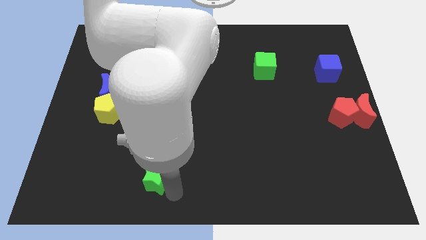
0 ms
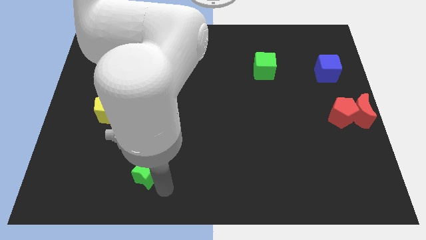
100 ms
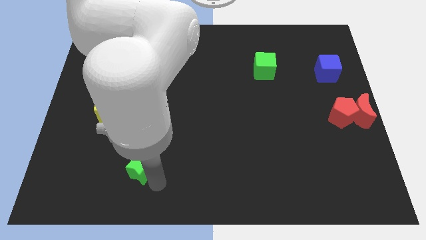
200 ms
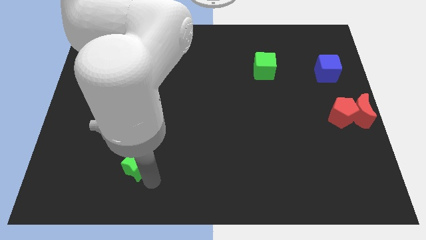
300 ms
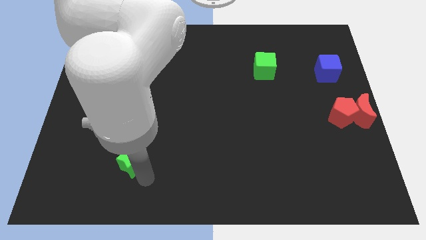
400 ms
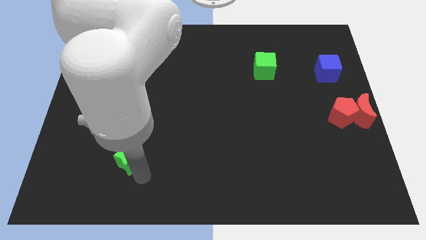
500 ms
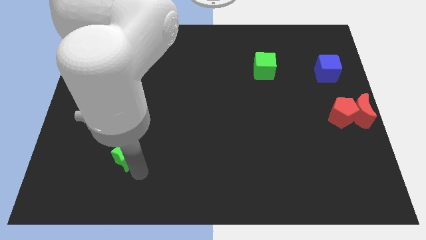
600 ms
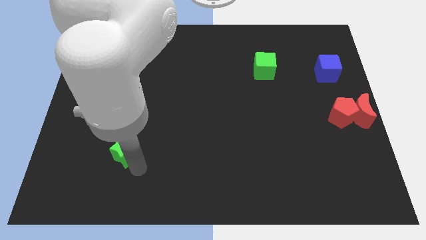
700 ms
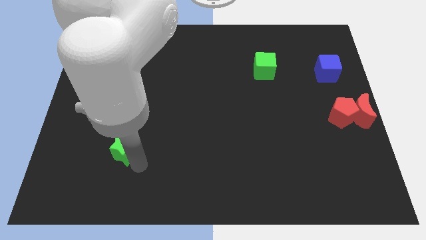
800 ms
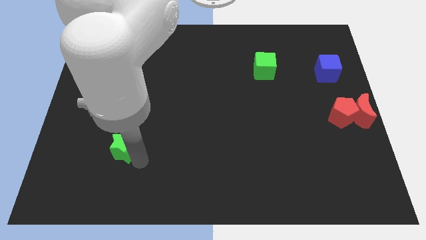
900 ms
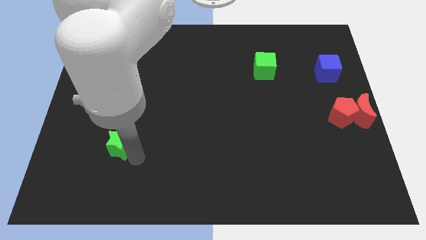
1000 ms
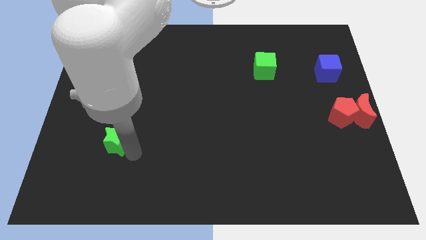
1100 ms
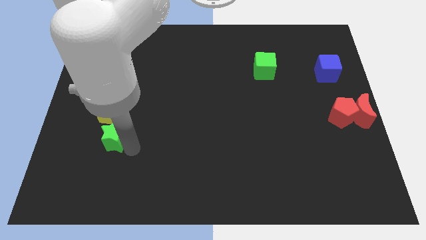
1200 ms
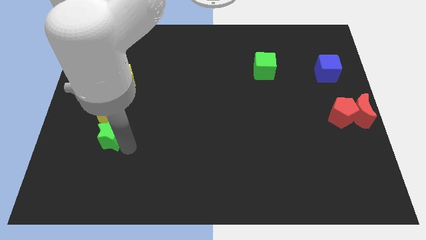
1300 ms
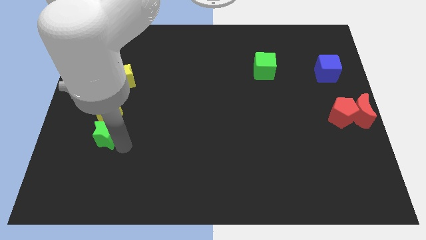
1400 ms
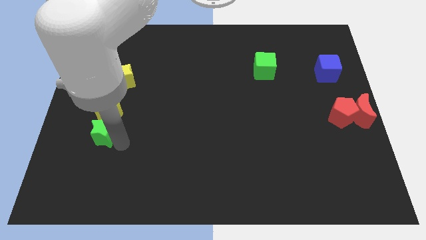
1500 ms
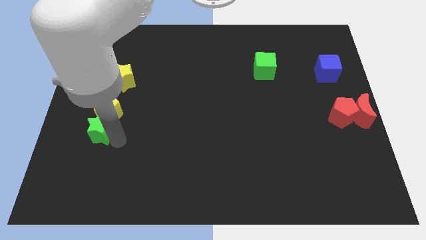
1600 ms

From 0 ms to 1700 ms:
move the green star to the middle left center of the board

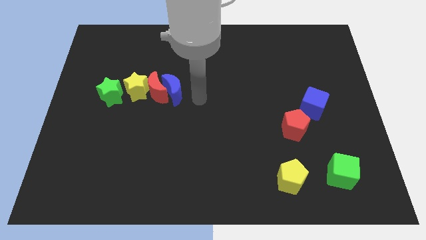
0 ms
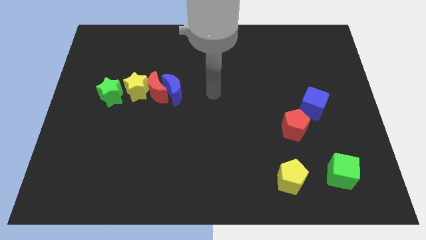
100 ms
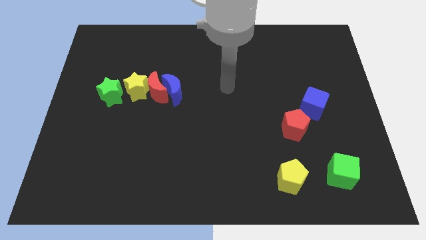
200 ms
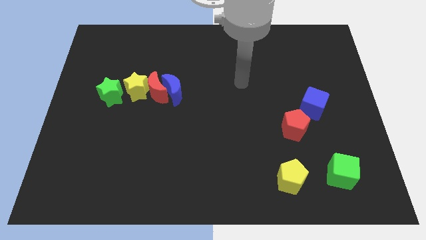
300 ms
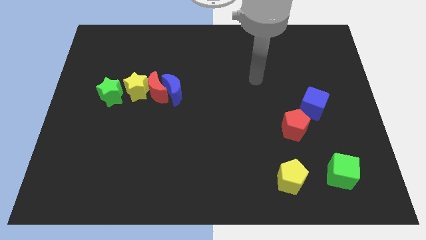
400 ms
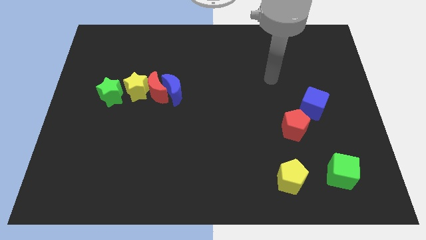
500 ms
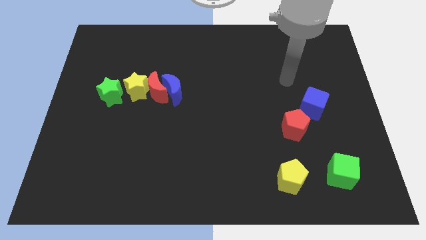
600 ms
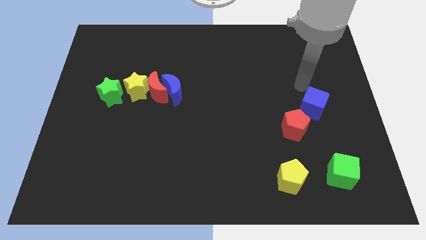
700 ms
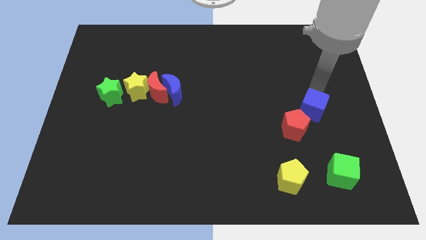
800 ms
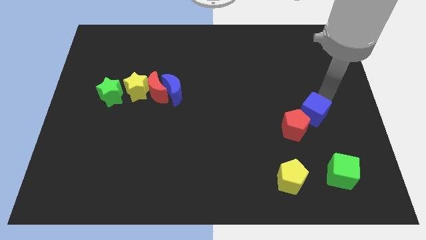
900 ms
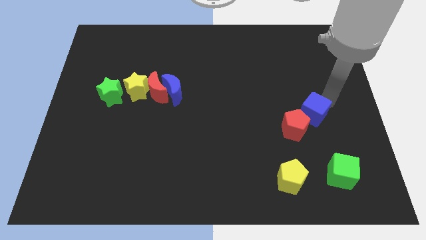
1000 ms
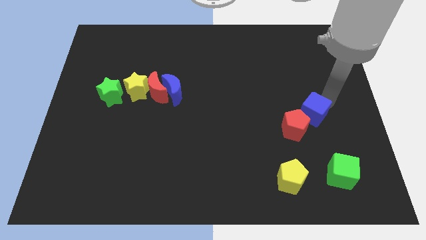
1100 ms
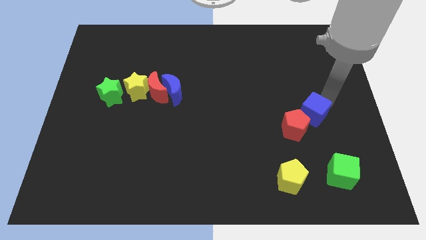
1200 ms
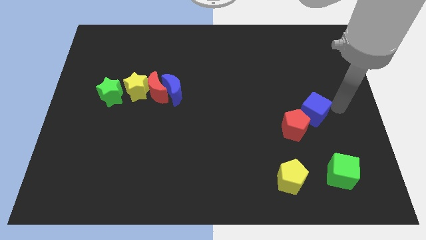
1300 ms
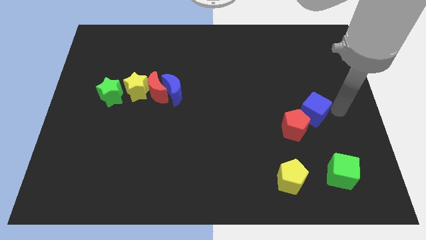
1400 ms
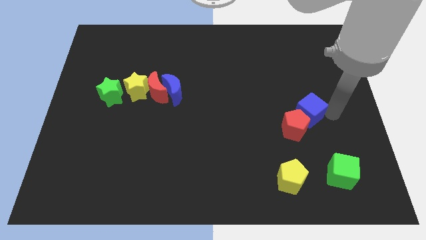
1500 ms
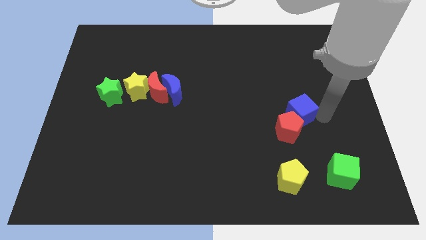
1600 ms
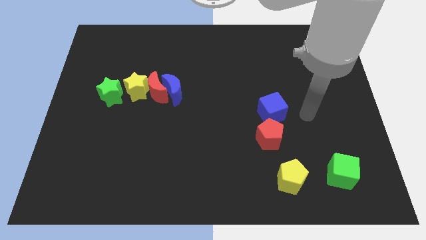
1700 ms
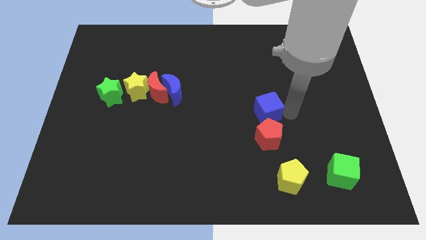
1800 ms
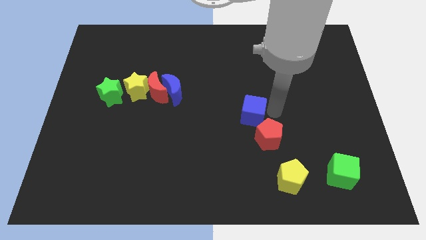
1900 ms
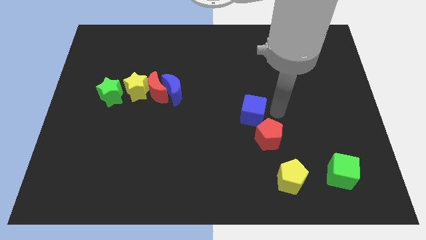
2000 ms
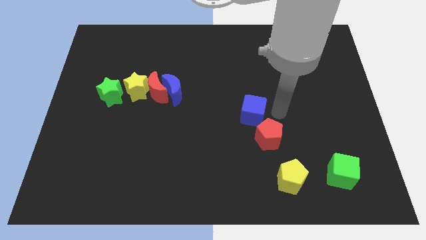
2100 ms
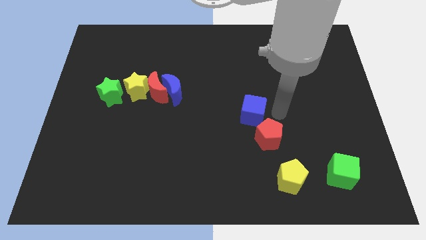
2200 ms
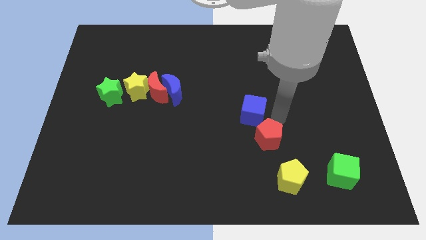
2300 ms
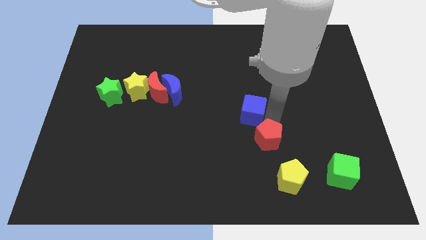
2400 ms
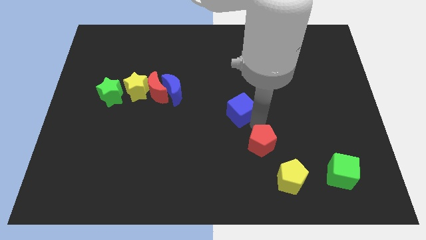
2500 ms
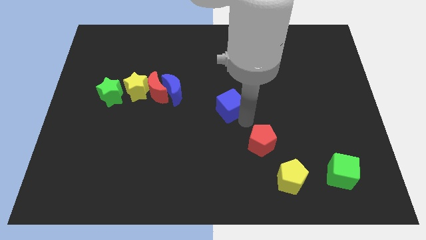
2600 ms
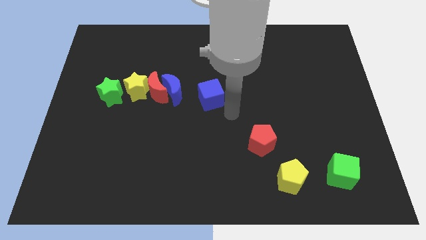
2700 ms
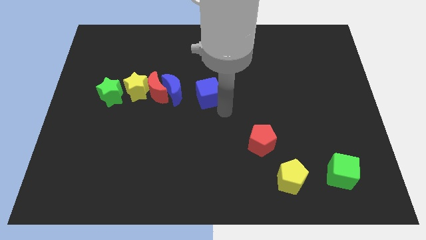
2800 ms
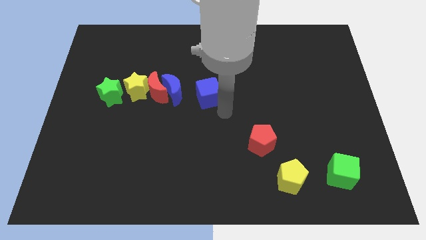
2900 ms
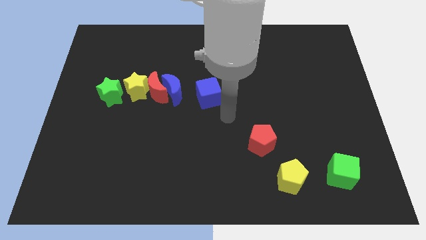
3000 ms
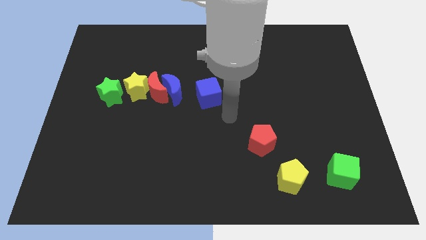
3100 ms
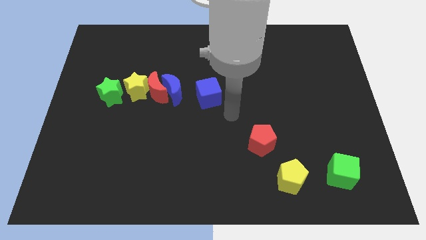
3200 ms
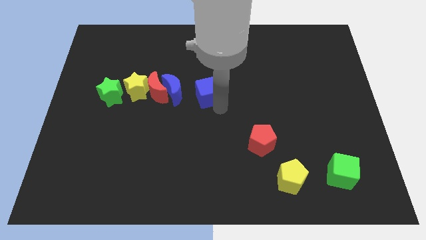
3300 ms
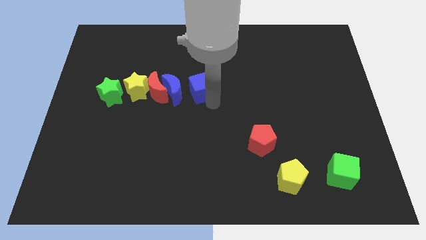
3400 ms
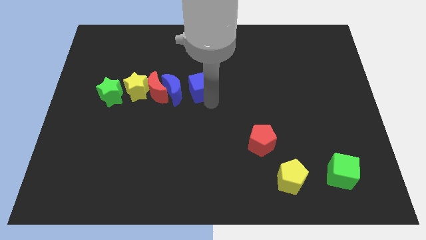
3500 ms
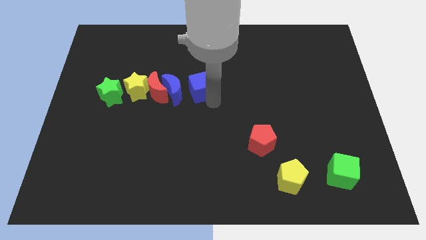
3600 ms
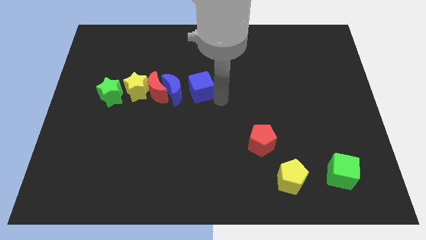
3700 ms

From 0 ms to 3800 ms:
move blue cube to the right of blue crescent

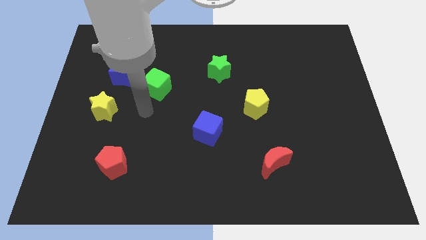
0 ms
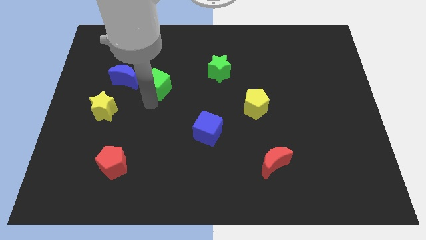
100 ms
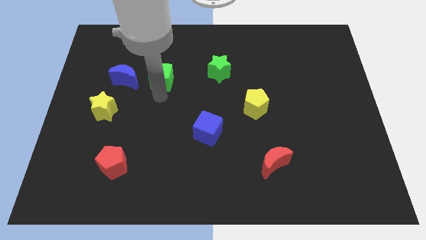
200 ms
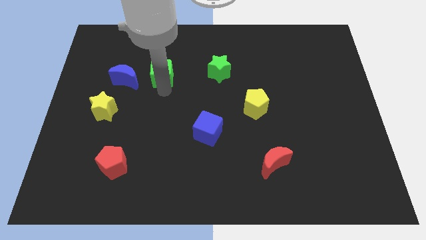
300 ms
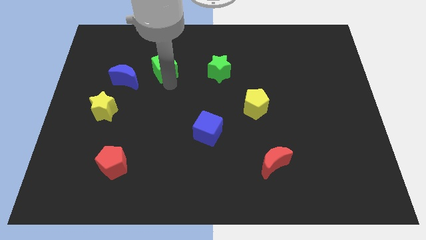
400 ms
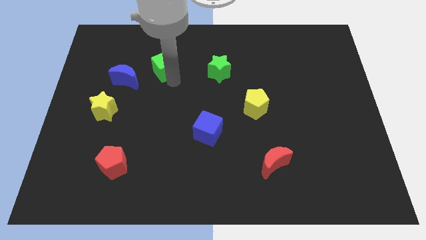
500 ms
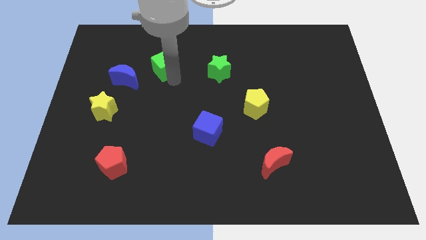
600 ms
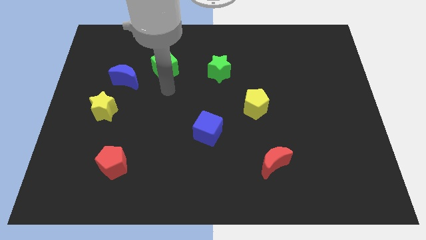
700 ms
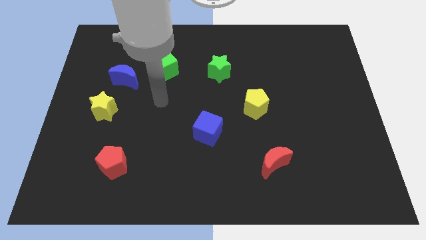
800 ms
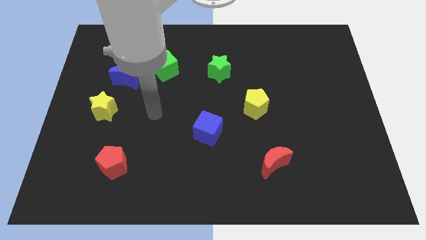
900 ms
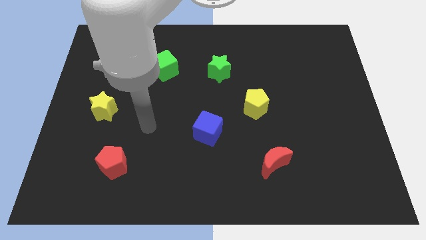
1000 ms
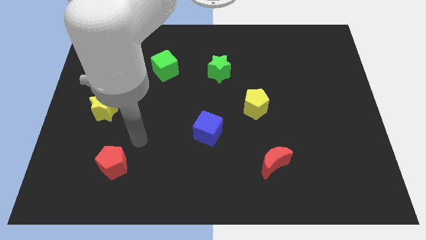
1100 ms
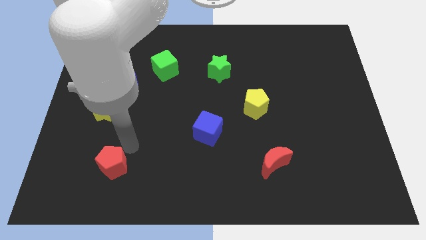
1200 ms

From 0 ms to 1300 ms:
move the green cube to the left side of the green star

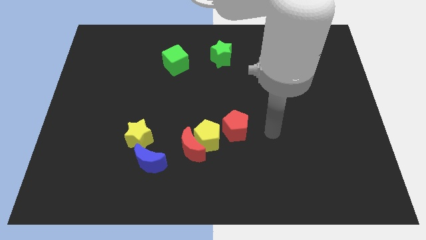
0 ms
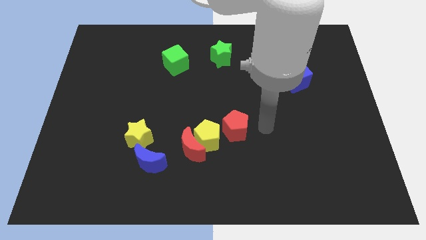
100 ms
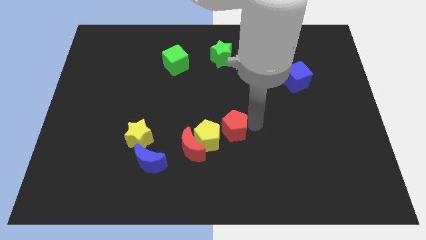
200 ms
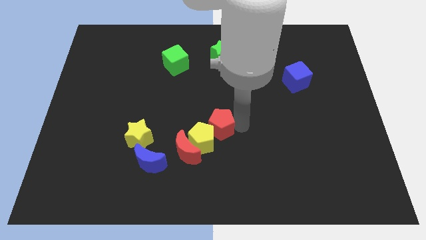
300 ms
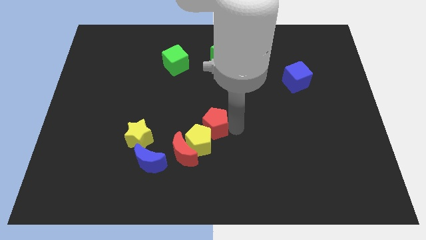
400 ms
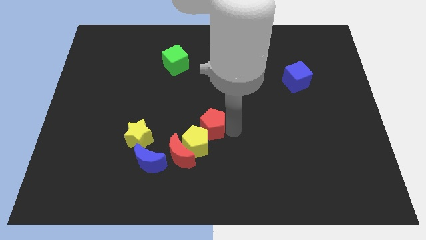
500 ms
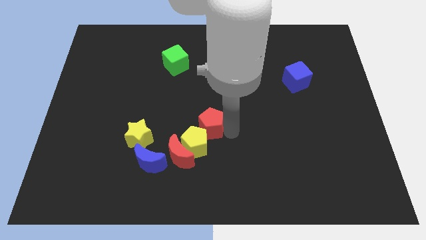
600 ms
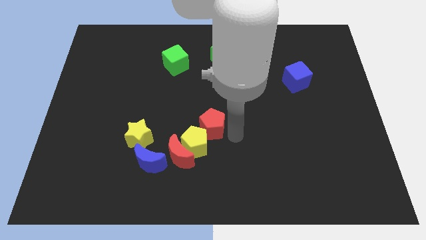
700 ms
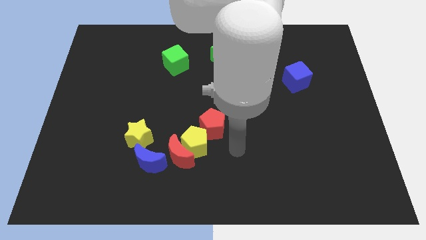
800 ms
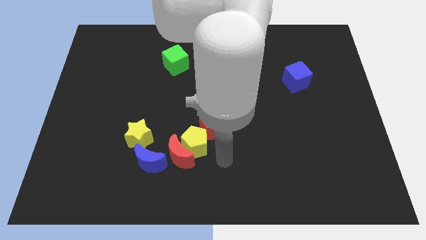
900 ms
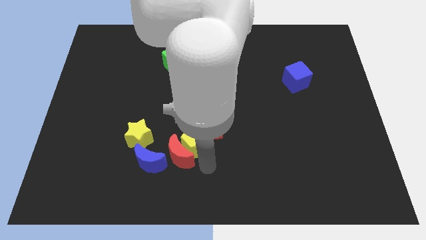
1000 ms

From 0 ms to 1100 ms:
push the red pentagon into the yellow pentagon

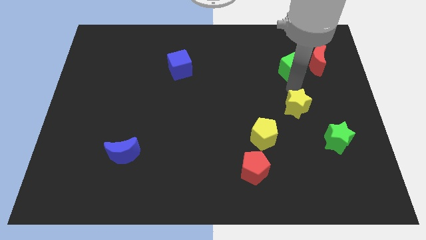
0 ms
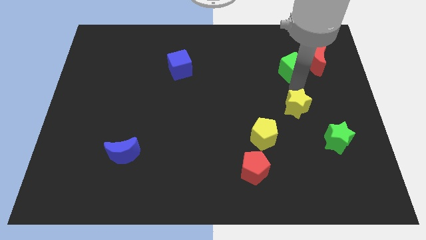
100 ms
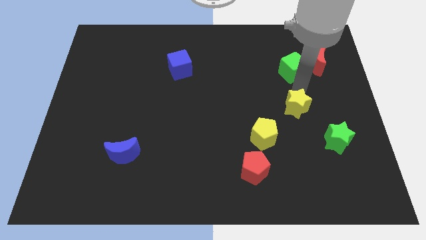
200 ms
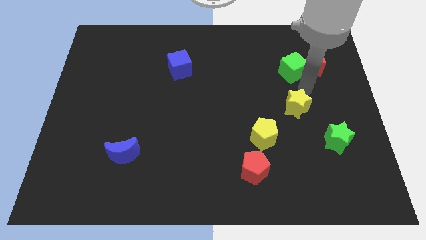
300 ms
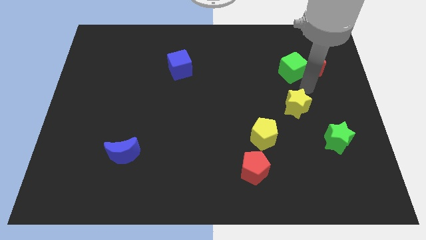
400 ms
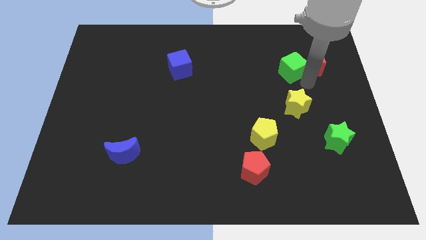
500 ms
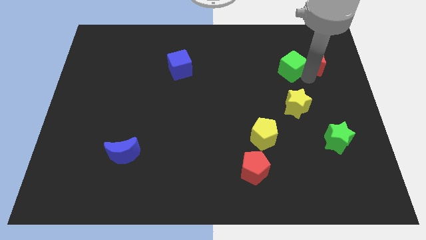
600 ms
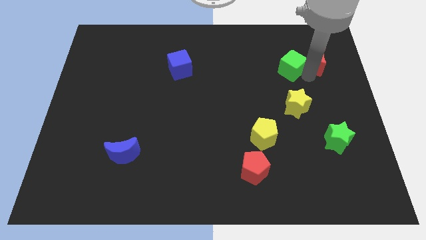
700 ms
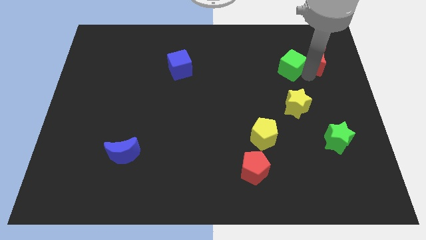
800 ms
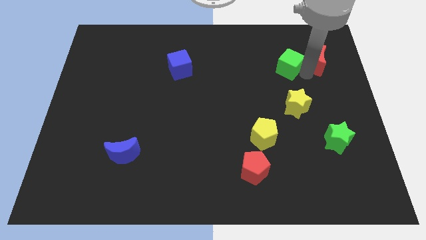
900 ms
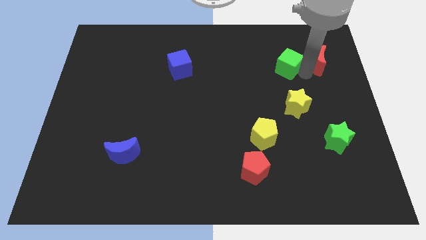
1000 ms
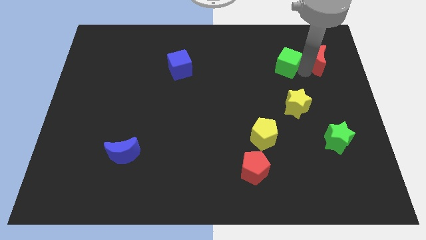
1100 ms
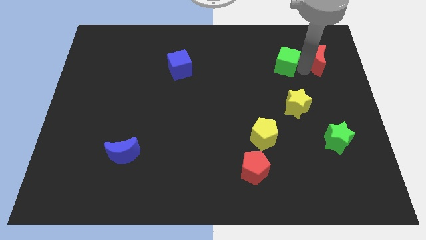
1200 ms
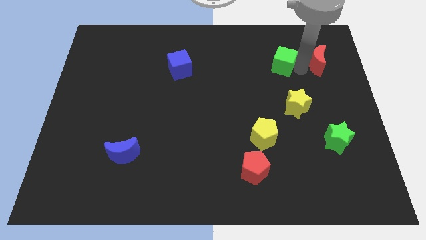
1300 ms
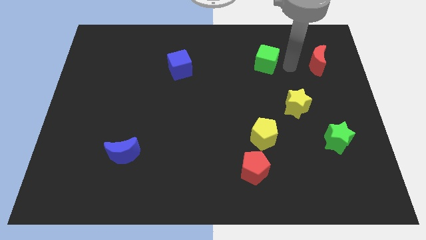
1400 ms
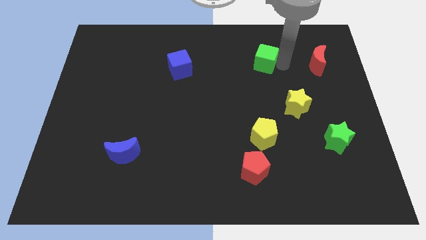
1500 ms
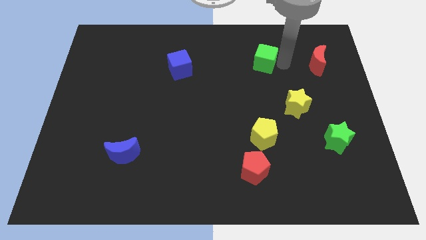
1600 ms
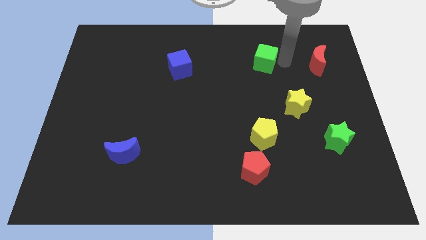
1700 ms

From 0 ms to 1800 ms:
move the green cube towards the top center
